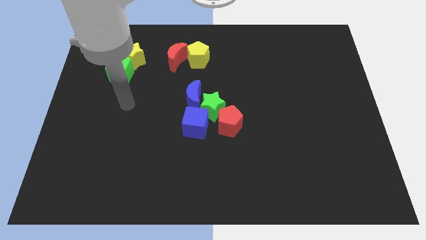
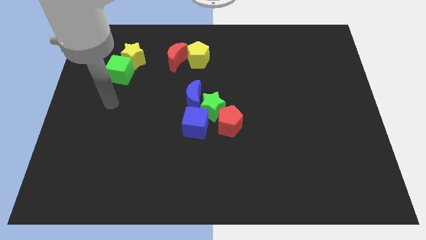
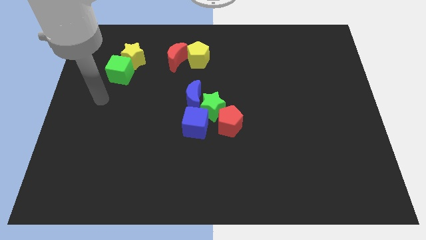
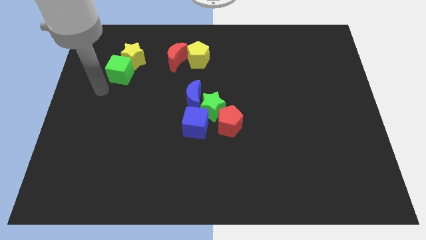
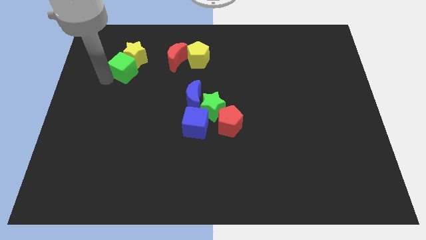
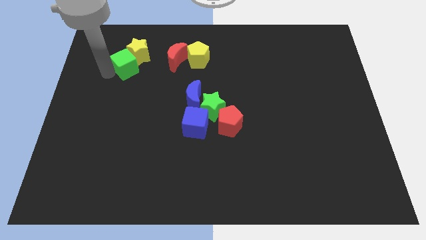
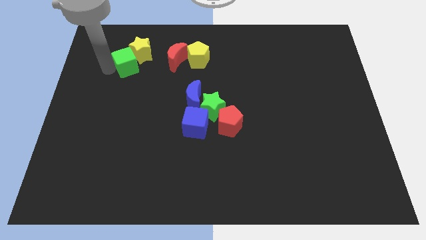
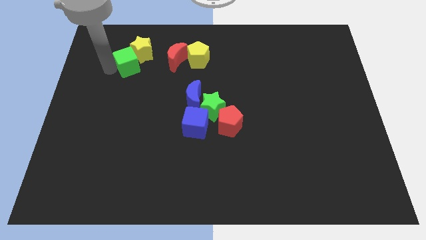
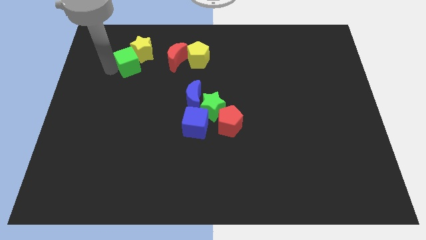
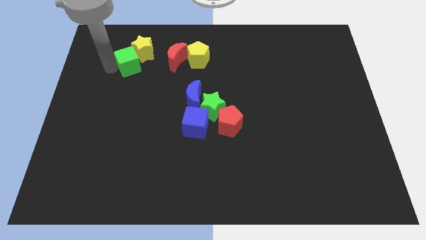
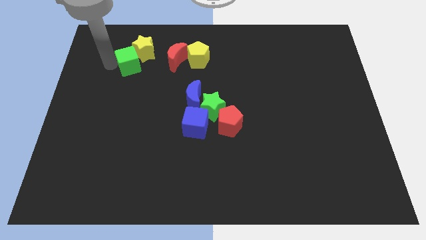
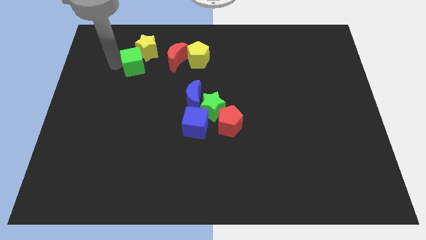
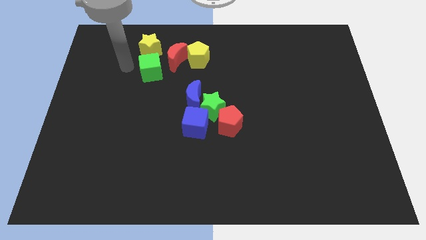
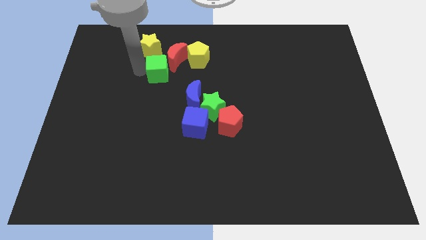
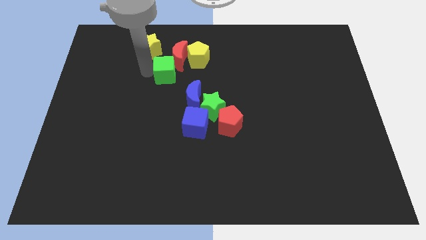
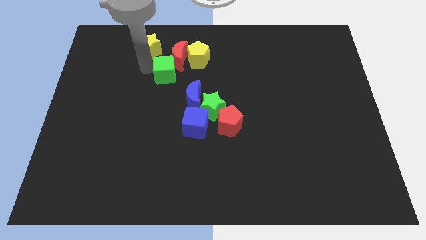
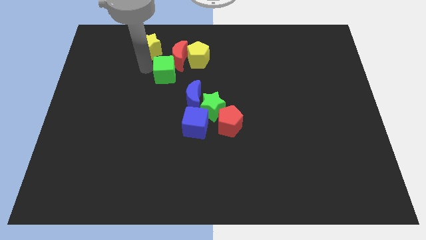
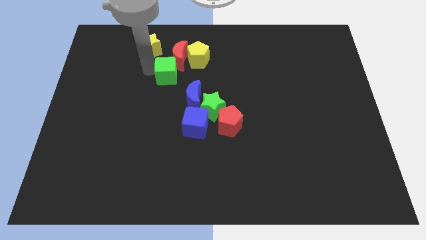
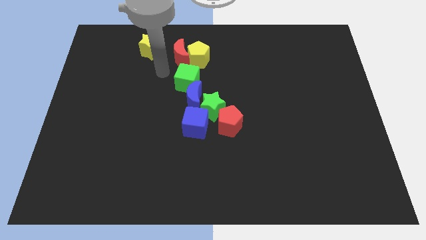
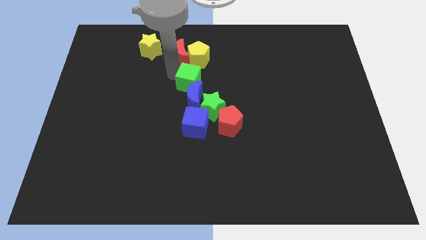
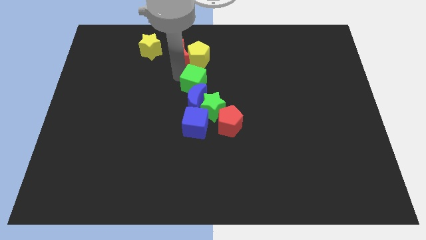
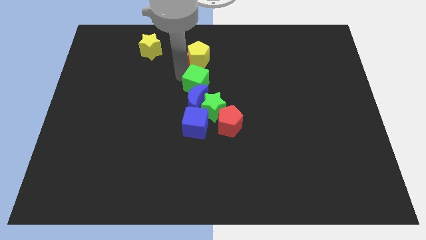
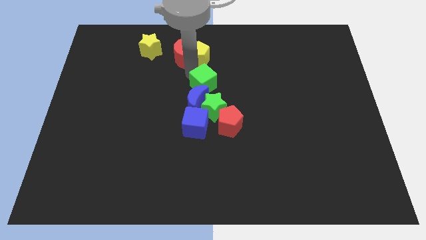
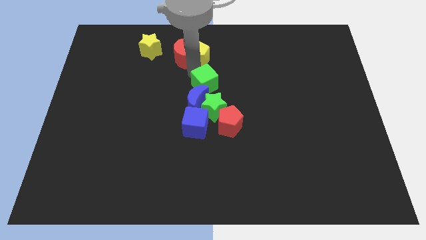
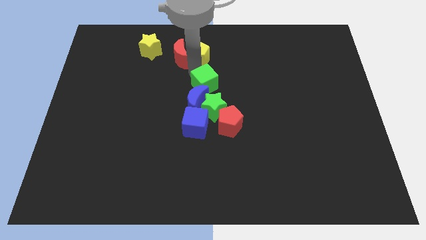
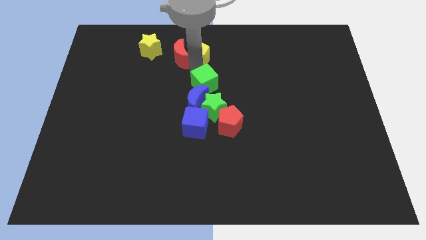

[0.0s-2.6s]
move the green cube above the blue moon

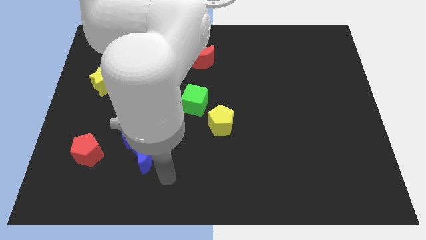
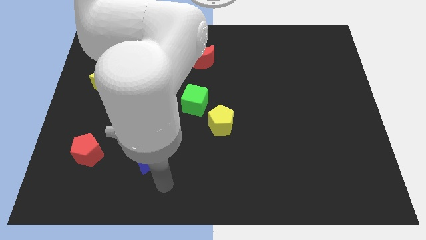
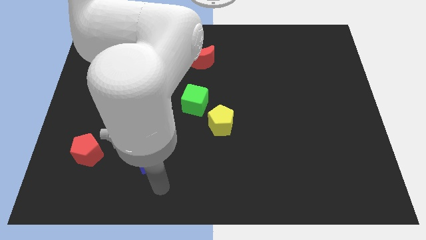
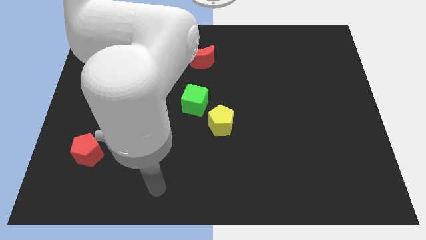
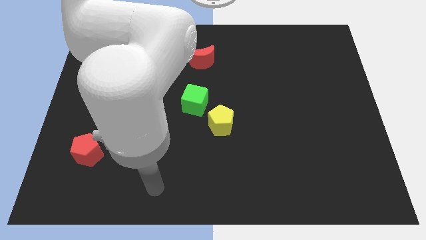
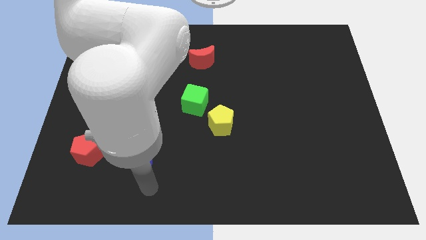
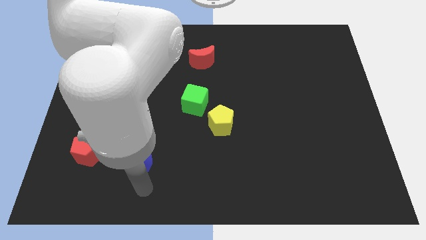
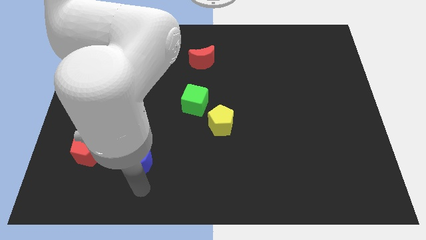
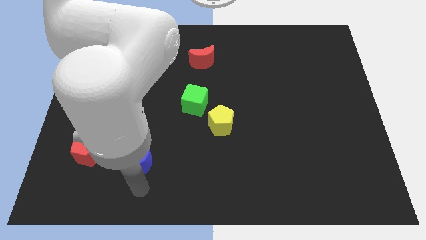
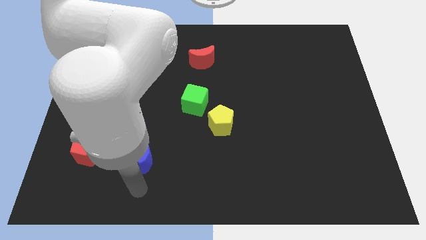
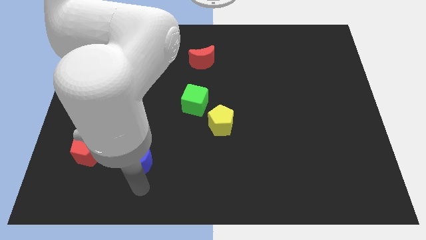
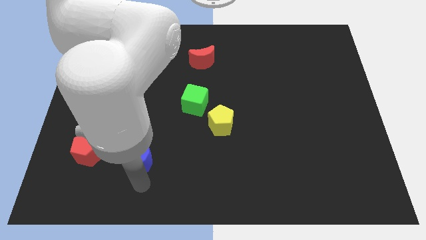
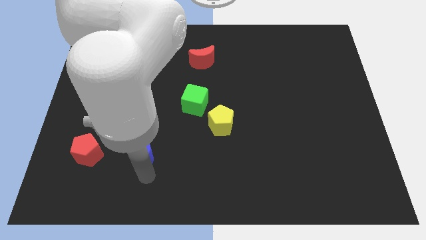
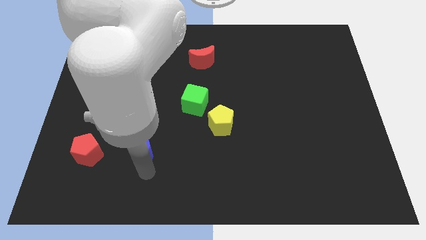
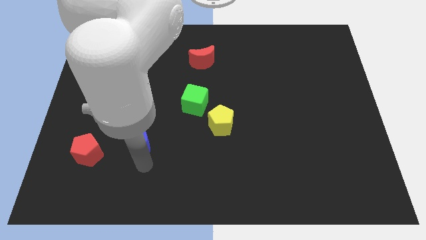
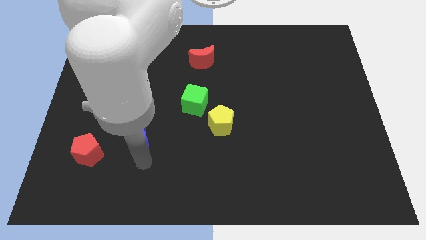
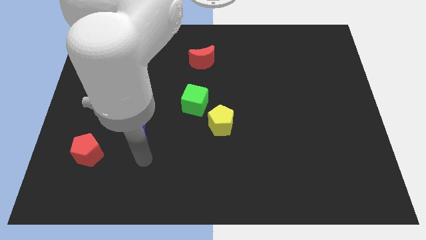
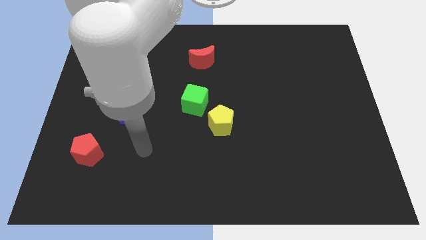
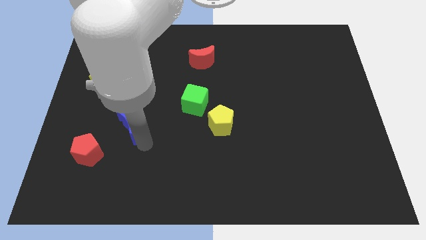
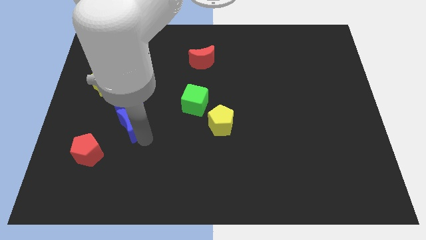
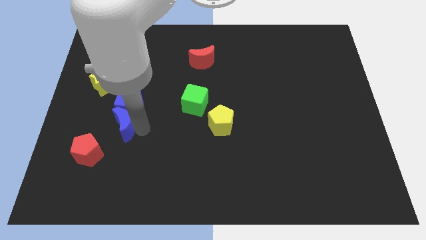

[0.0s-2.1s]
put blue crescent and the blue cube diagonally top right to the red pentagon

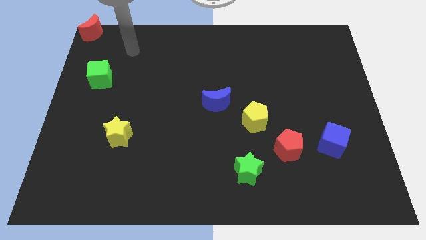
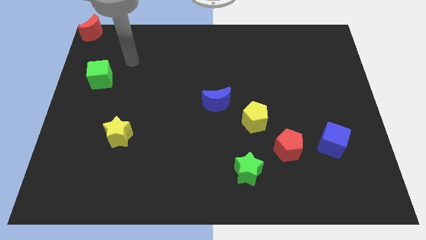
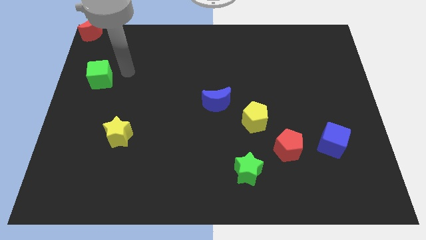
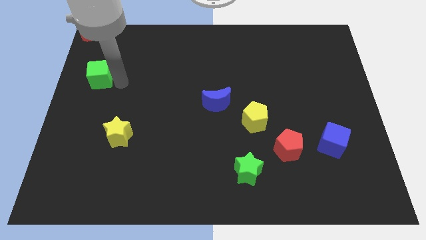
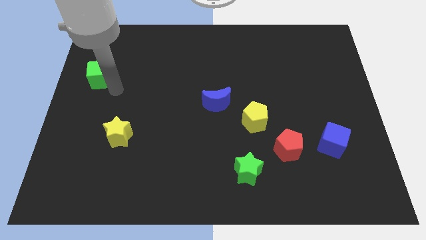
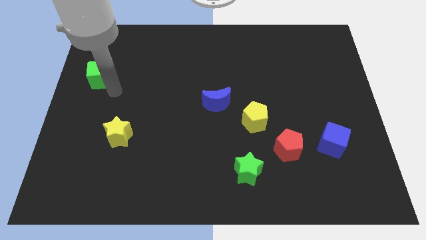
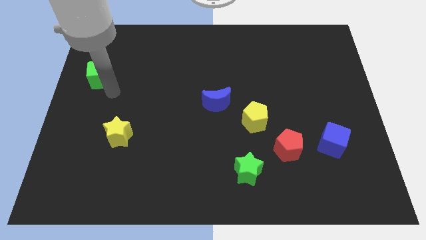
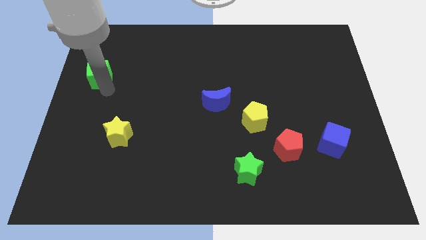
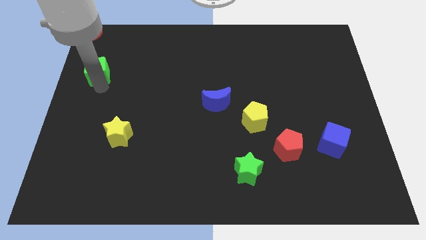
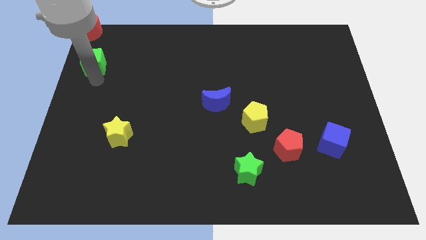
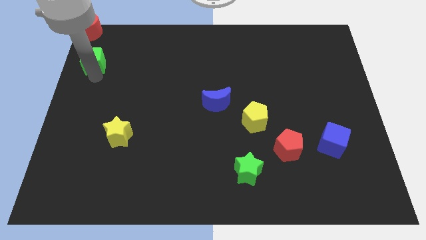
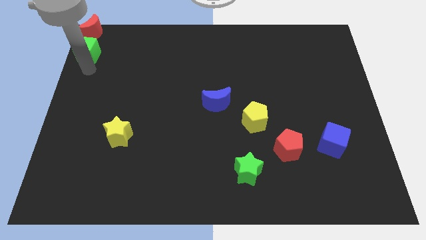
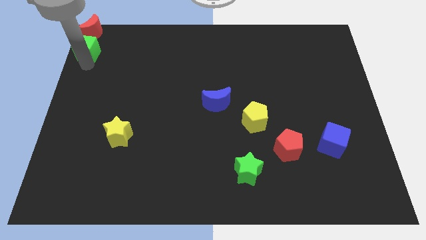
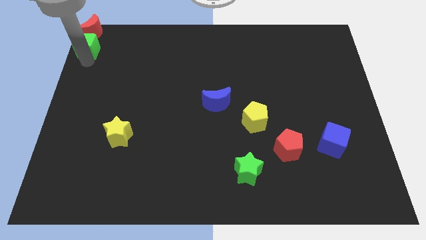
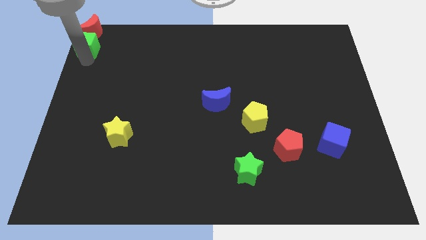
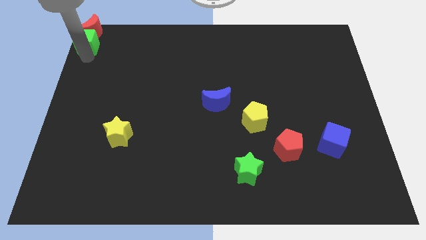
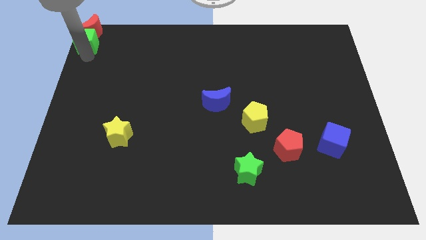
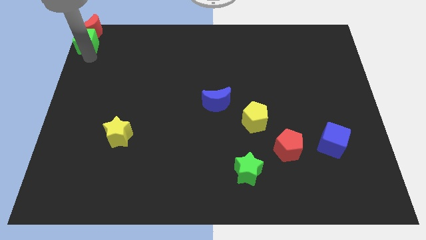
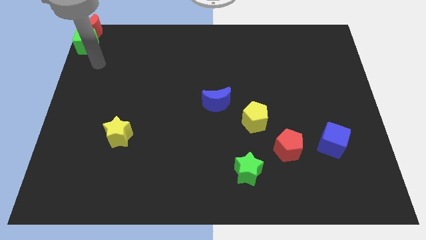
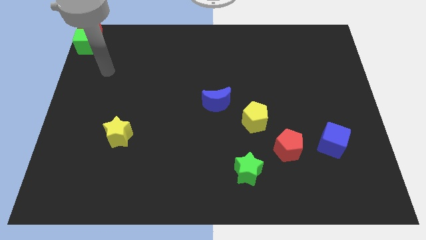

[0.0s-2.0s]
push the green cube towards the red moon

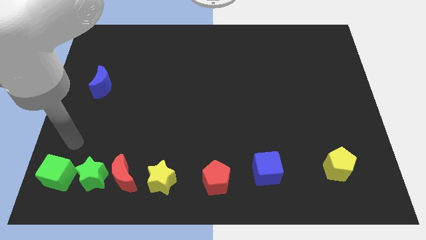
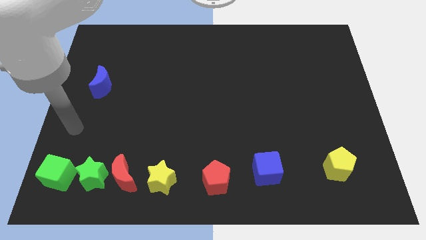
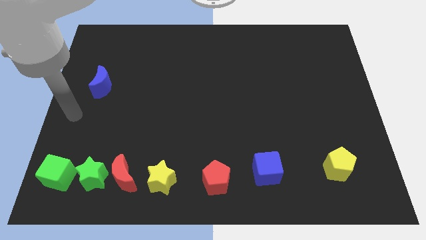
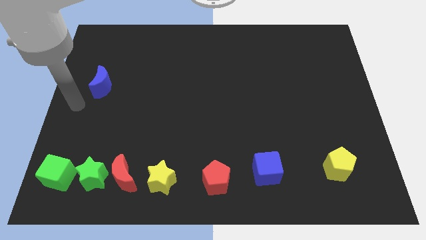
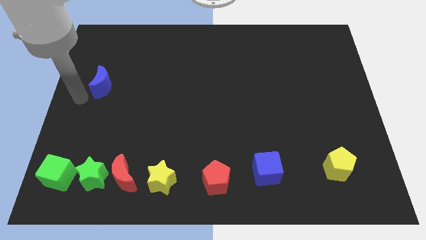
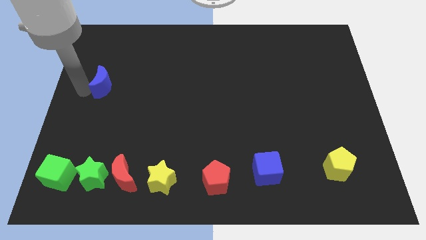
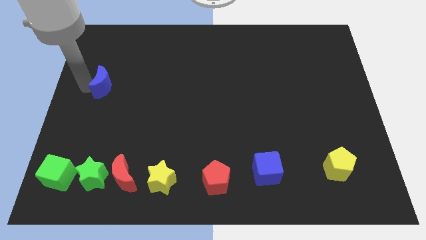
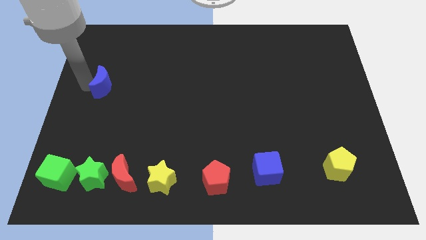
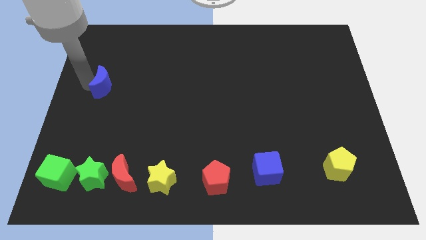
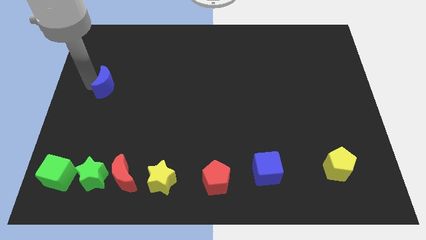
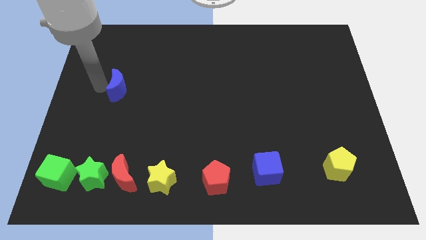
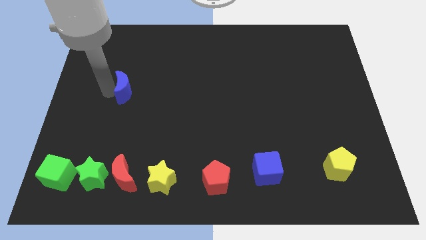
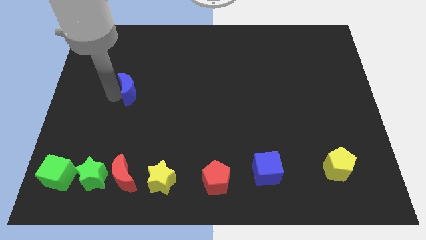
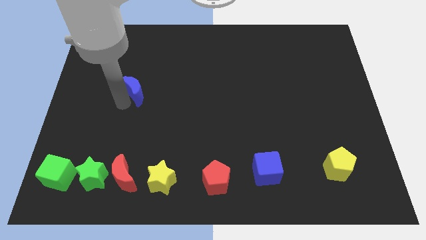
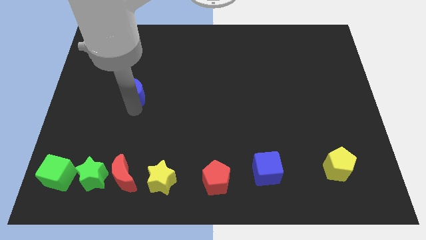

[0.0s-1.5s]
move the blue moon above the red moon

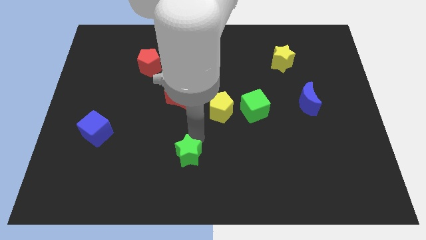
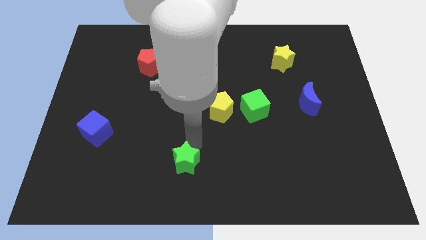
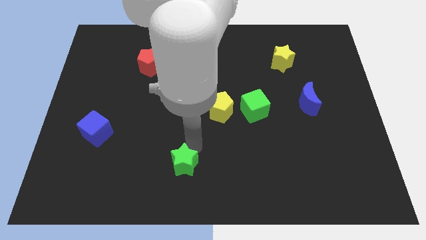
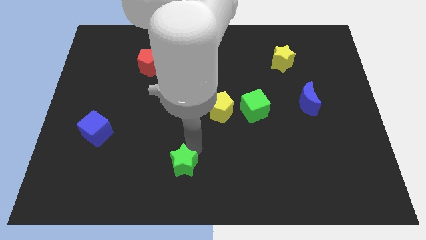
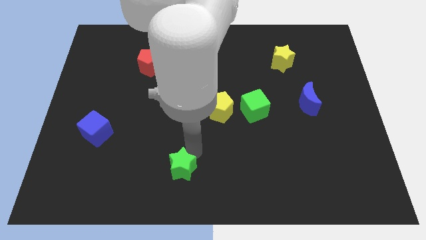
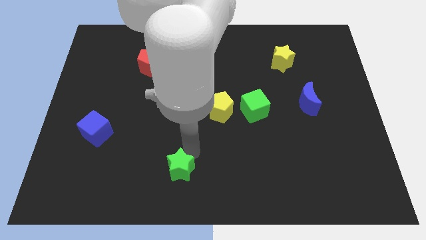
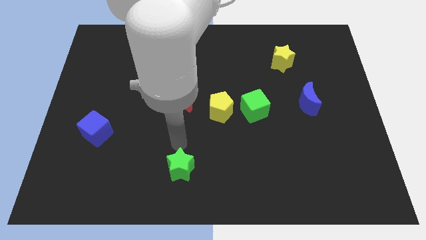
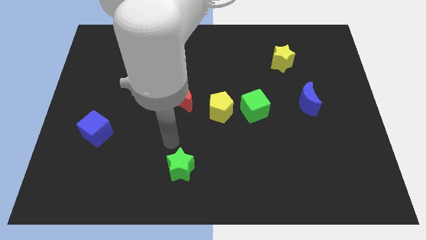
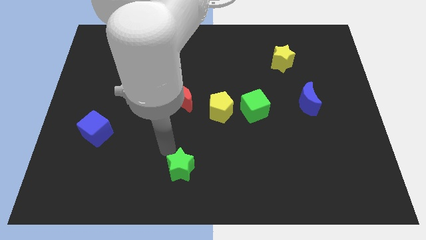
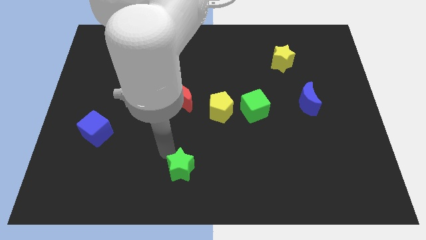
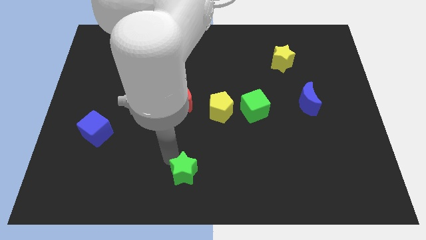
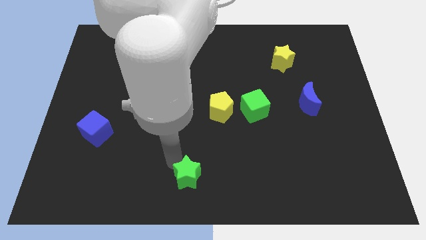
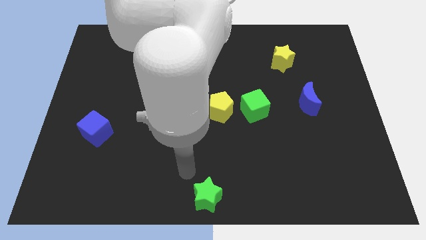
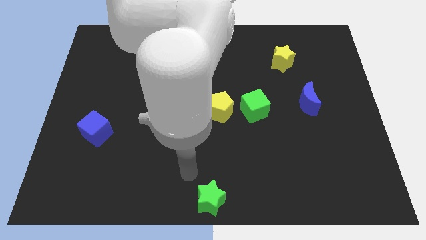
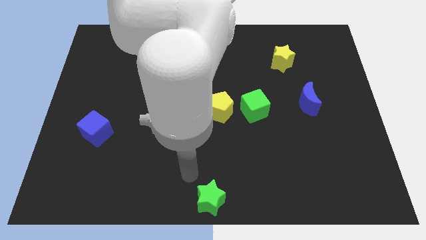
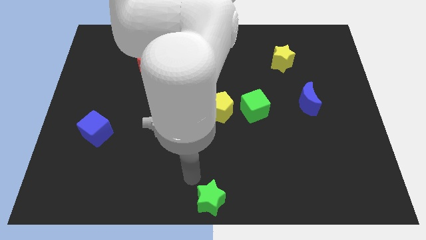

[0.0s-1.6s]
move the green star to the bottom center of the board
